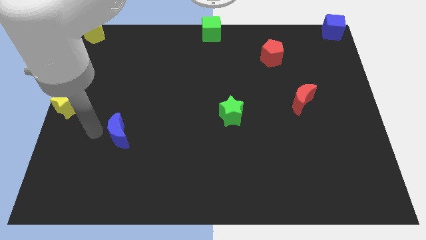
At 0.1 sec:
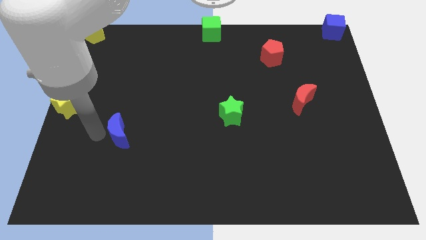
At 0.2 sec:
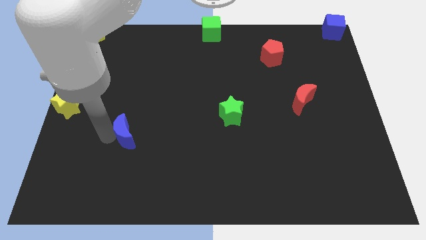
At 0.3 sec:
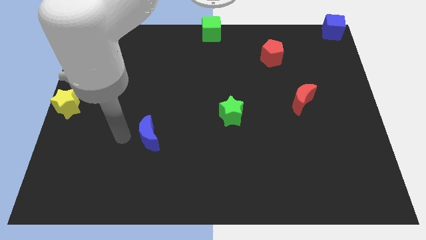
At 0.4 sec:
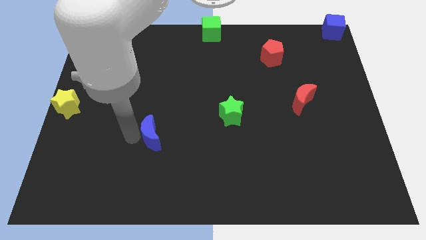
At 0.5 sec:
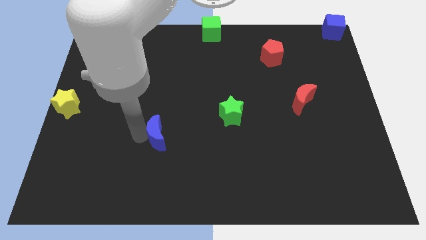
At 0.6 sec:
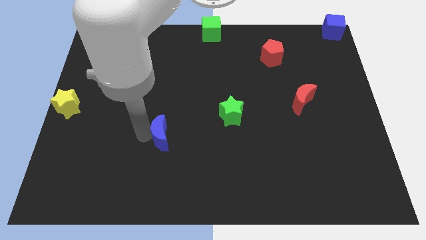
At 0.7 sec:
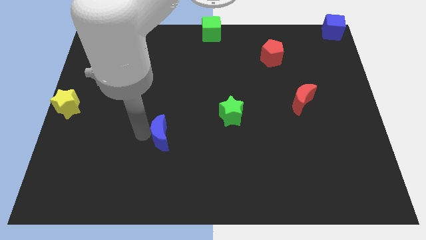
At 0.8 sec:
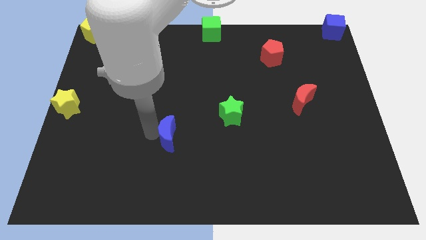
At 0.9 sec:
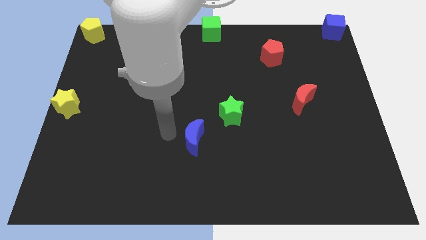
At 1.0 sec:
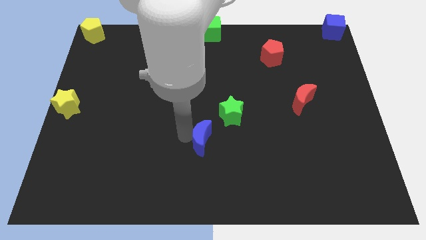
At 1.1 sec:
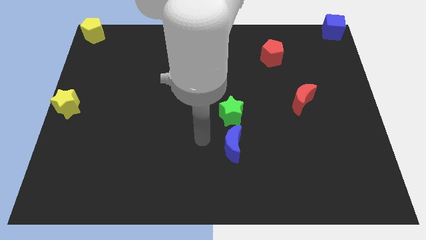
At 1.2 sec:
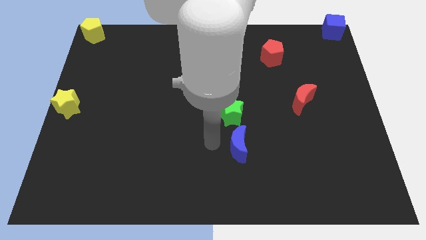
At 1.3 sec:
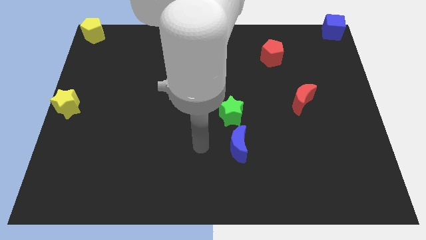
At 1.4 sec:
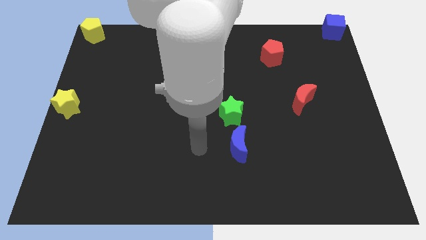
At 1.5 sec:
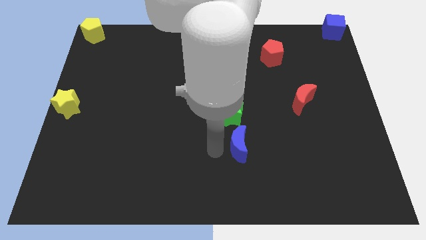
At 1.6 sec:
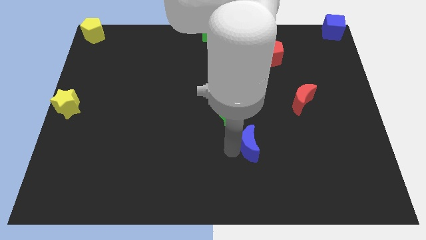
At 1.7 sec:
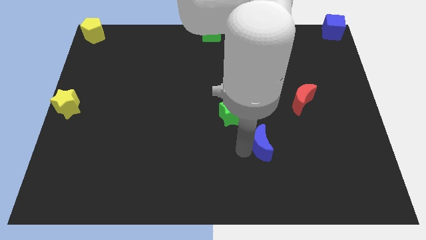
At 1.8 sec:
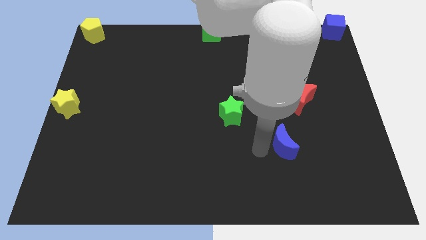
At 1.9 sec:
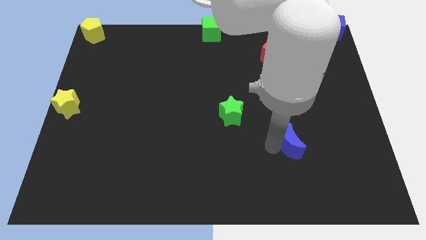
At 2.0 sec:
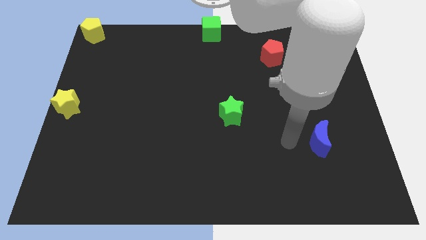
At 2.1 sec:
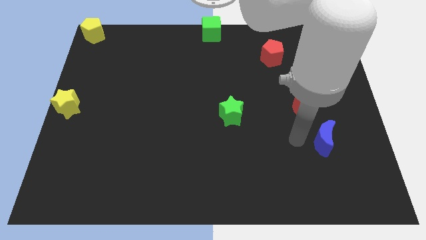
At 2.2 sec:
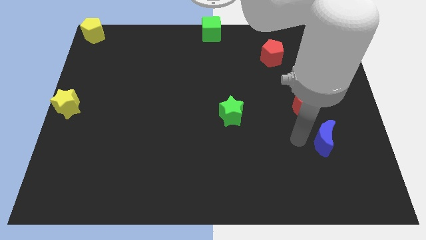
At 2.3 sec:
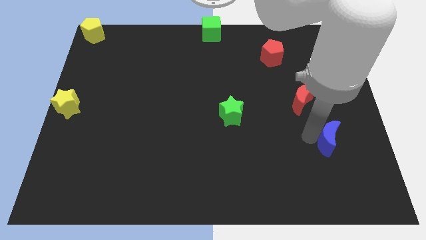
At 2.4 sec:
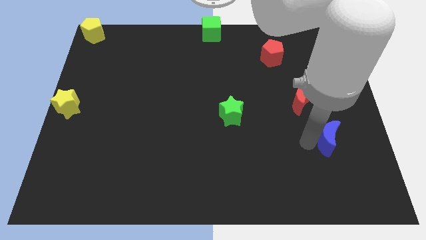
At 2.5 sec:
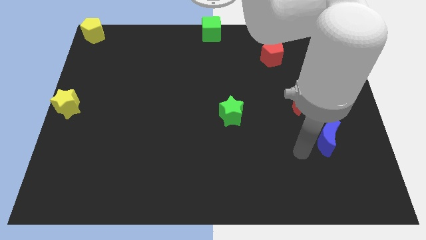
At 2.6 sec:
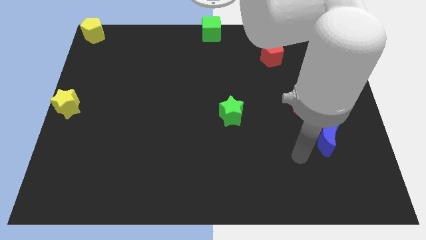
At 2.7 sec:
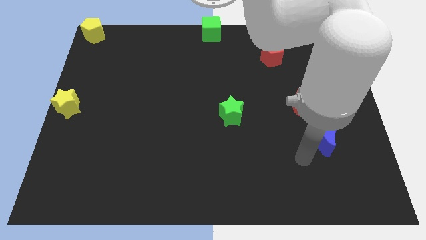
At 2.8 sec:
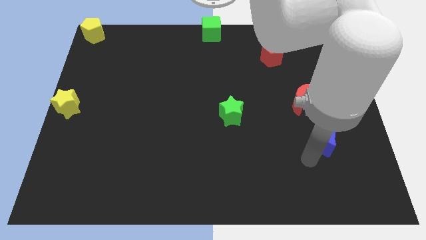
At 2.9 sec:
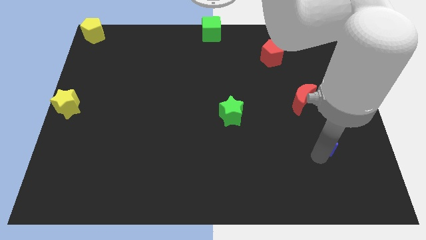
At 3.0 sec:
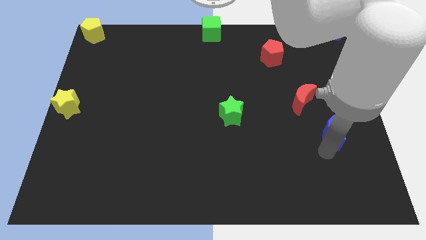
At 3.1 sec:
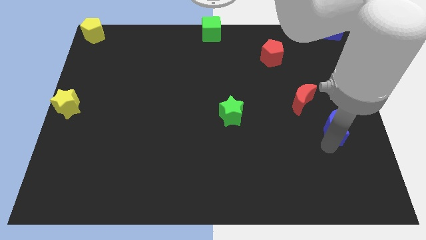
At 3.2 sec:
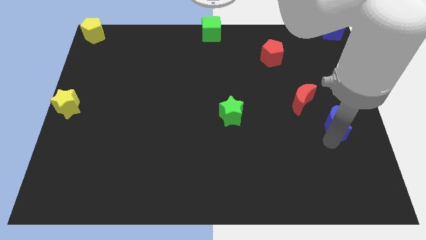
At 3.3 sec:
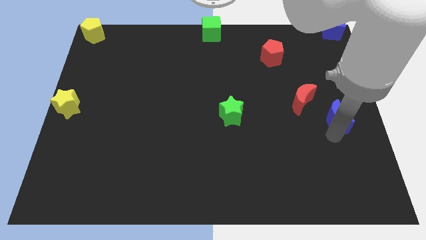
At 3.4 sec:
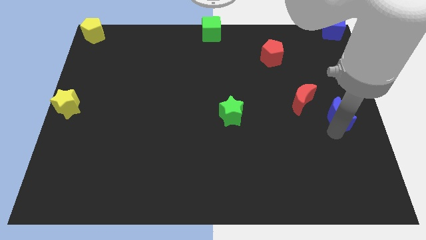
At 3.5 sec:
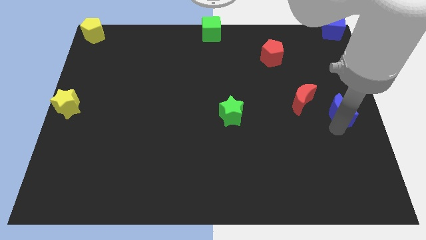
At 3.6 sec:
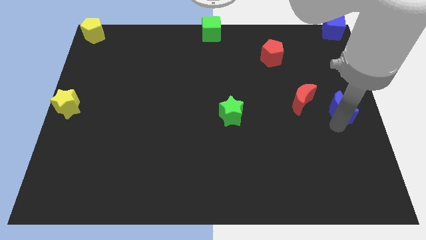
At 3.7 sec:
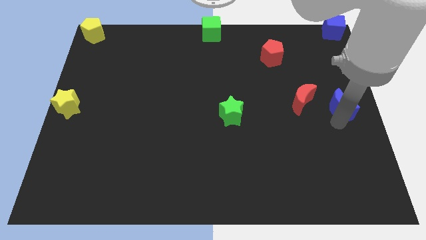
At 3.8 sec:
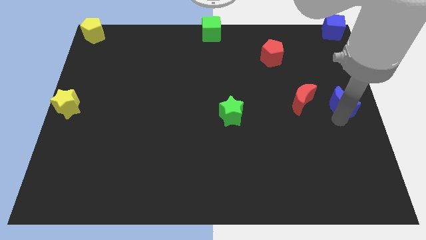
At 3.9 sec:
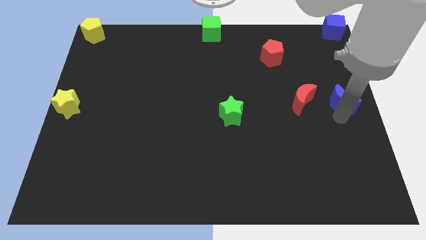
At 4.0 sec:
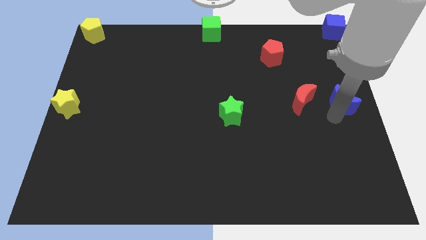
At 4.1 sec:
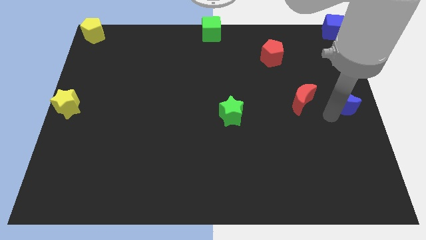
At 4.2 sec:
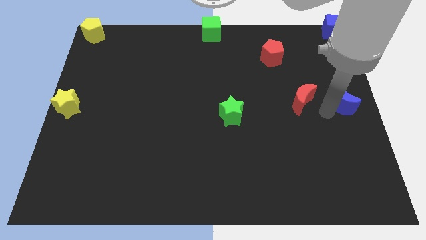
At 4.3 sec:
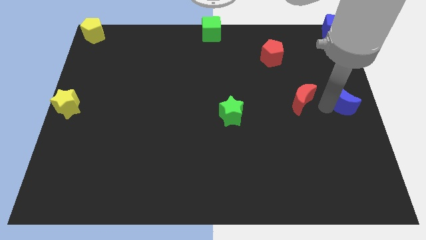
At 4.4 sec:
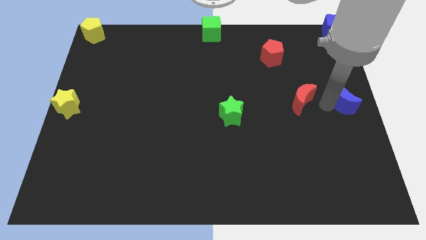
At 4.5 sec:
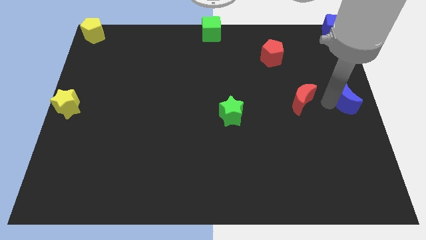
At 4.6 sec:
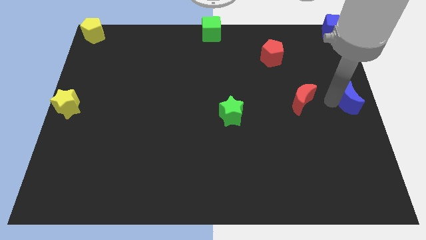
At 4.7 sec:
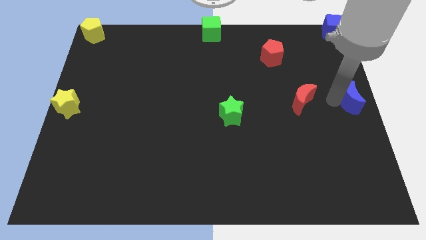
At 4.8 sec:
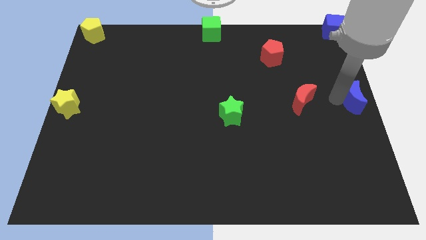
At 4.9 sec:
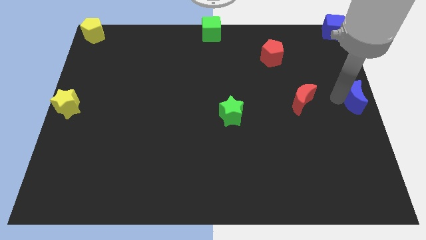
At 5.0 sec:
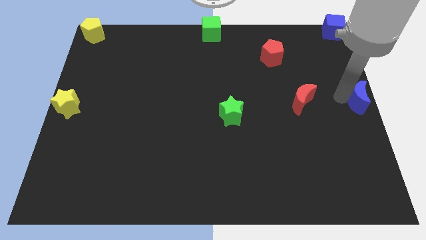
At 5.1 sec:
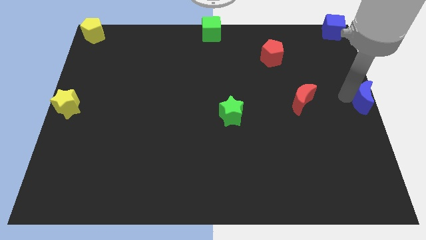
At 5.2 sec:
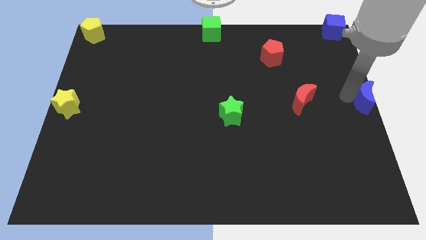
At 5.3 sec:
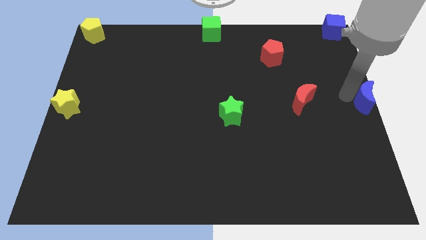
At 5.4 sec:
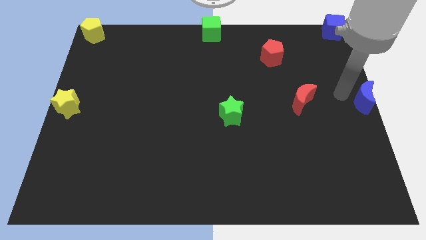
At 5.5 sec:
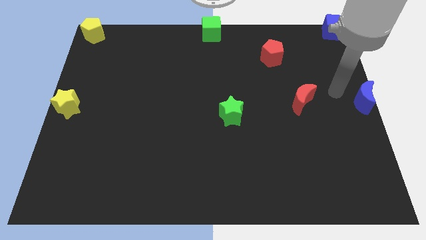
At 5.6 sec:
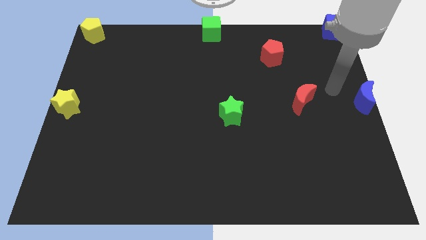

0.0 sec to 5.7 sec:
place the blue crescent at the right center of the board

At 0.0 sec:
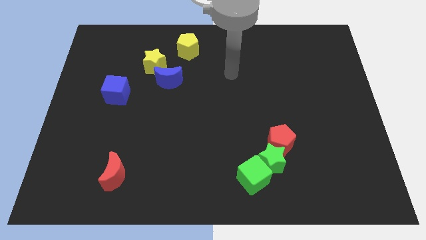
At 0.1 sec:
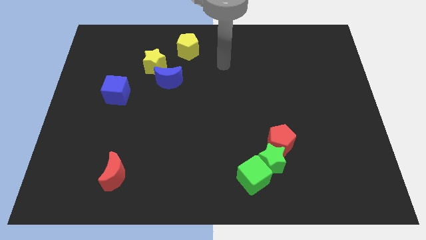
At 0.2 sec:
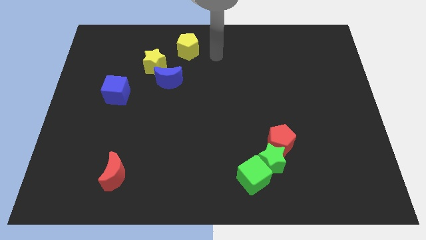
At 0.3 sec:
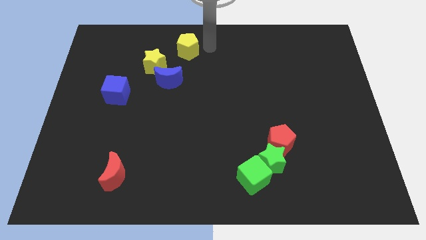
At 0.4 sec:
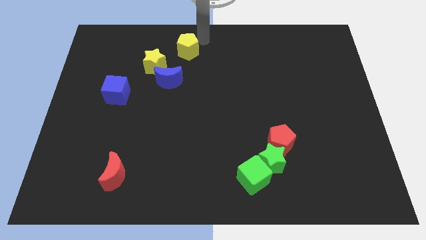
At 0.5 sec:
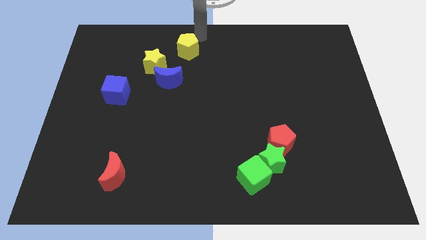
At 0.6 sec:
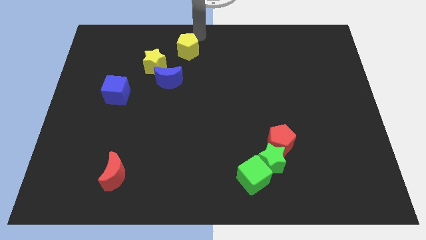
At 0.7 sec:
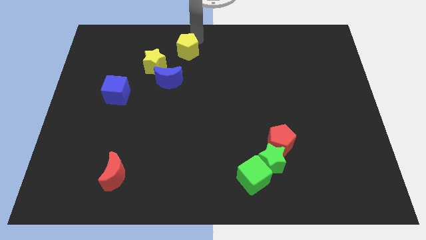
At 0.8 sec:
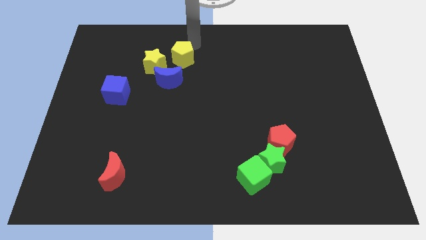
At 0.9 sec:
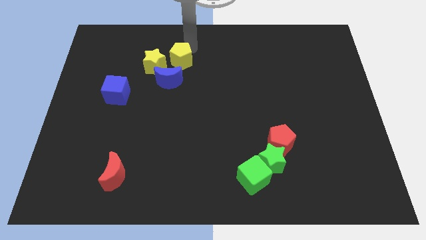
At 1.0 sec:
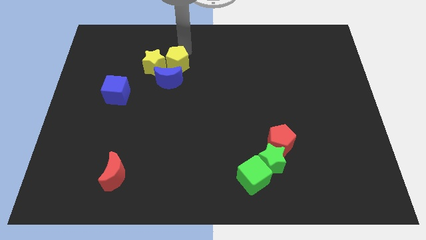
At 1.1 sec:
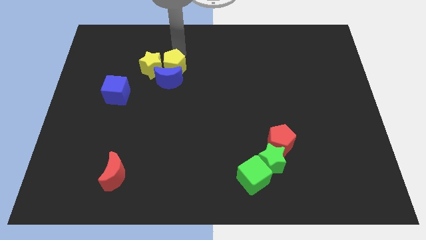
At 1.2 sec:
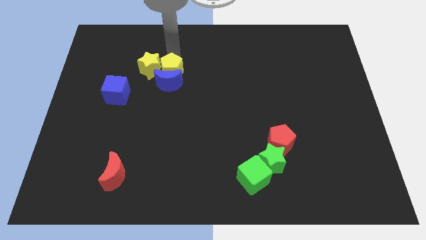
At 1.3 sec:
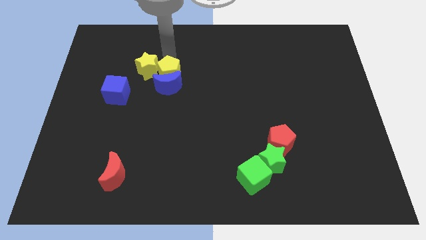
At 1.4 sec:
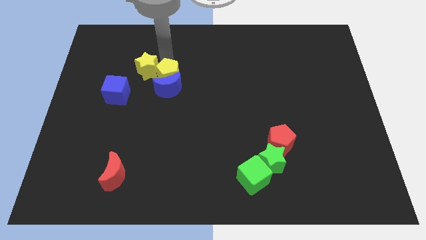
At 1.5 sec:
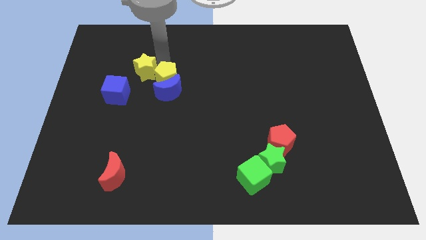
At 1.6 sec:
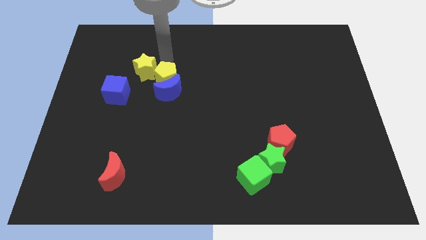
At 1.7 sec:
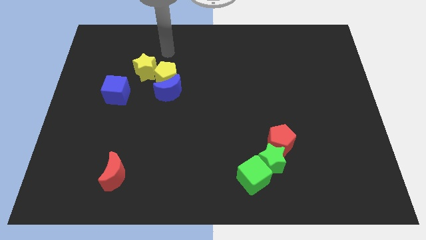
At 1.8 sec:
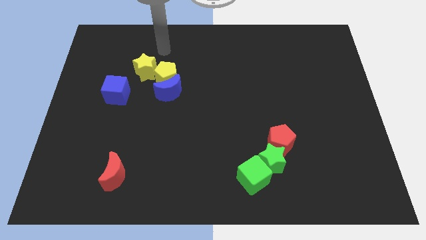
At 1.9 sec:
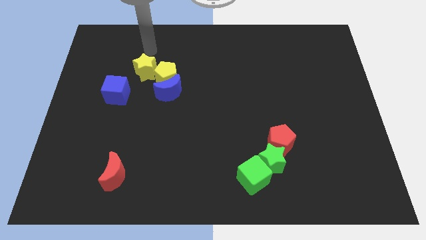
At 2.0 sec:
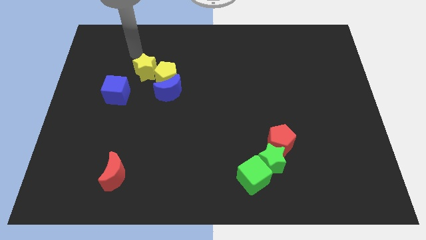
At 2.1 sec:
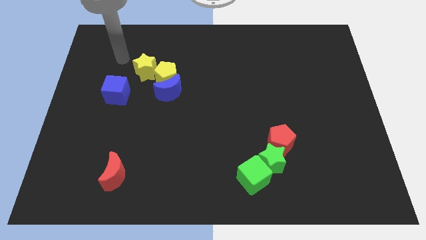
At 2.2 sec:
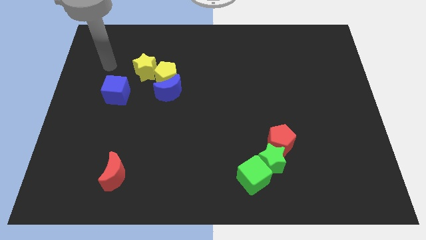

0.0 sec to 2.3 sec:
place the yellow pentagon on top of blue crescent

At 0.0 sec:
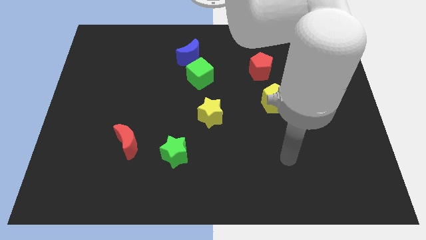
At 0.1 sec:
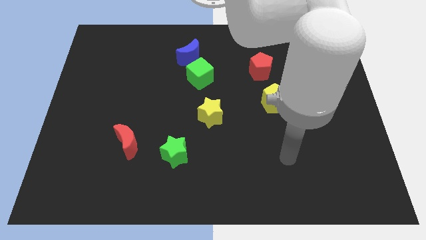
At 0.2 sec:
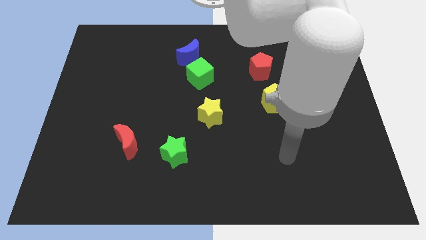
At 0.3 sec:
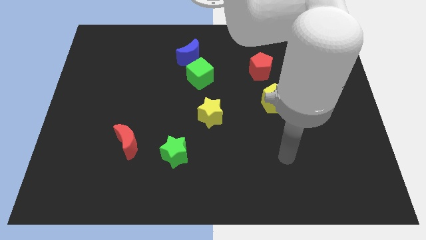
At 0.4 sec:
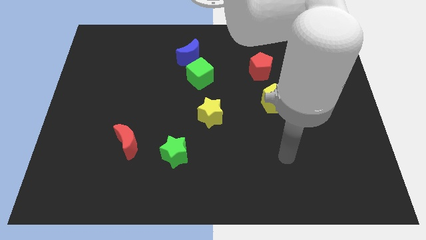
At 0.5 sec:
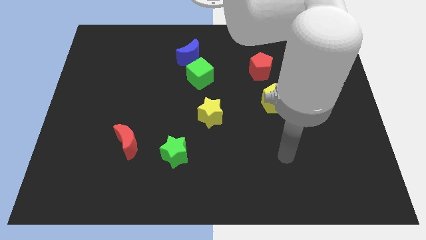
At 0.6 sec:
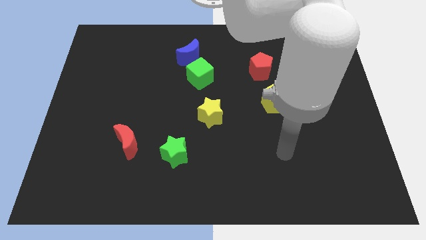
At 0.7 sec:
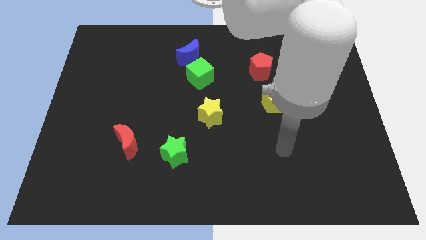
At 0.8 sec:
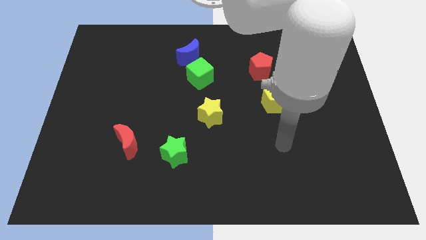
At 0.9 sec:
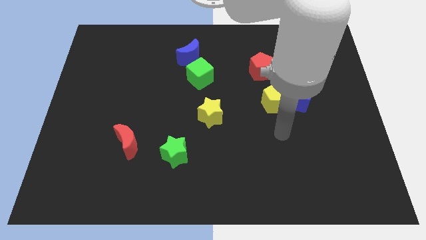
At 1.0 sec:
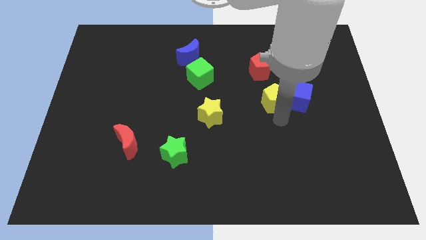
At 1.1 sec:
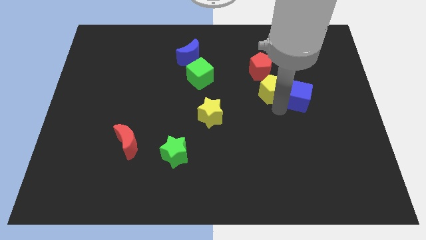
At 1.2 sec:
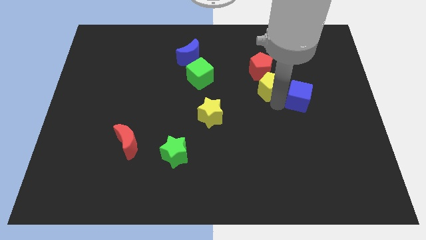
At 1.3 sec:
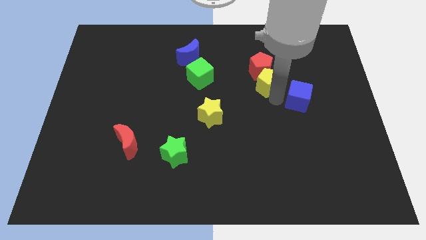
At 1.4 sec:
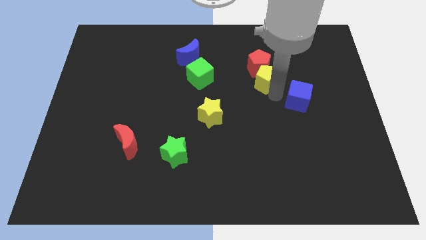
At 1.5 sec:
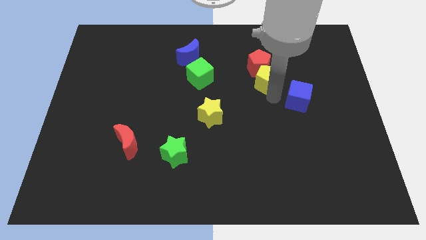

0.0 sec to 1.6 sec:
move the yellow pentagon into the red pentagon
